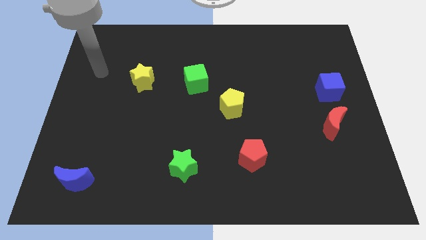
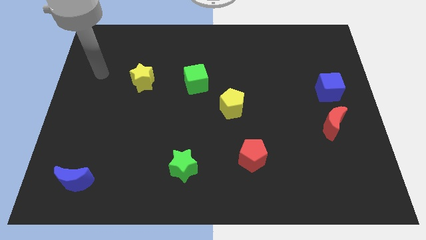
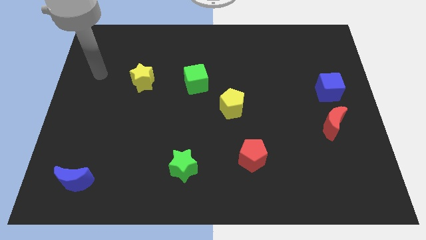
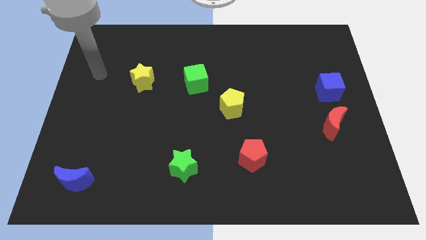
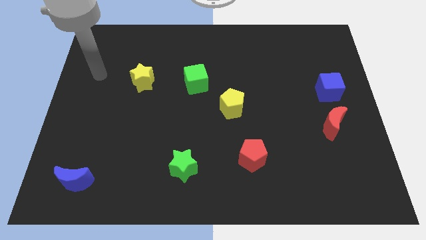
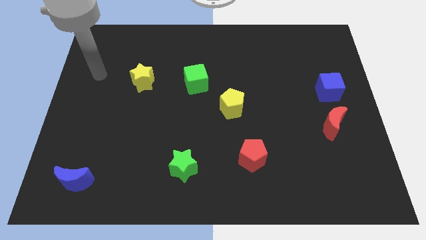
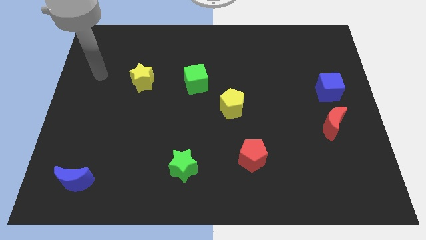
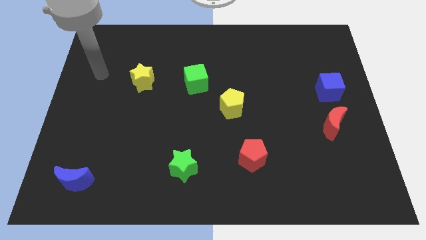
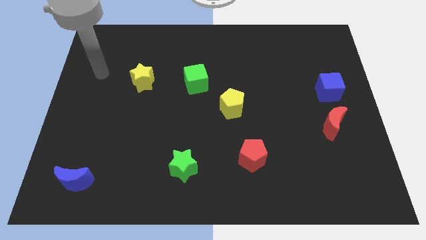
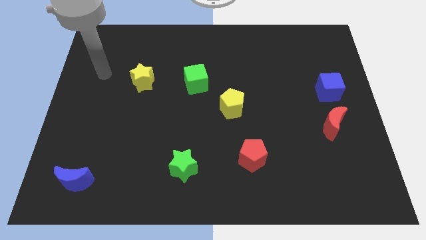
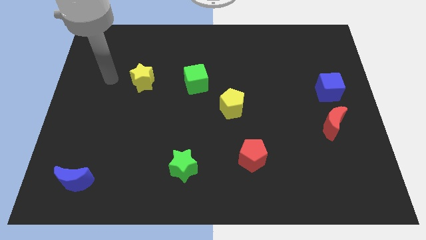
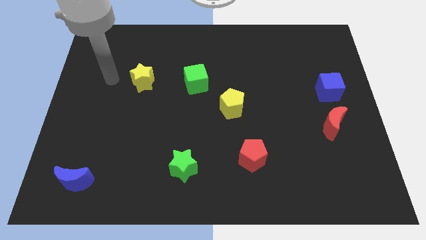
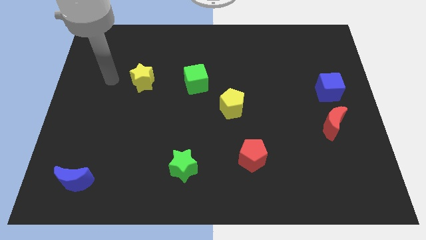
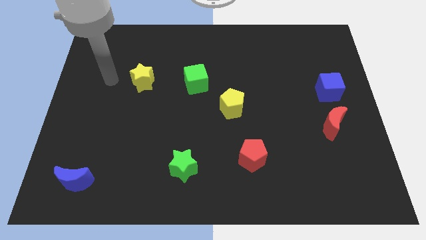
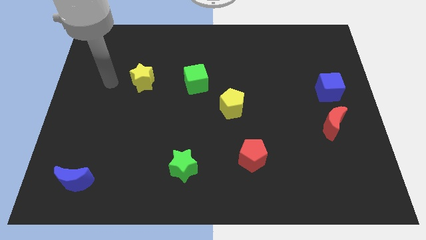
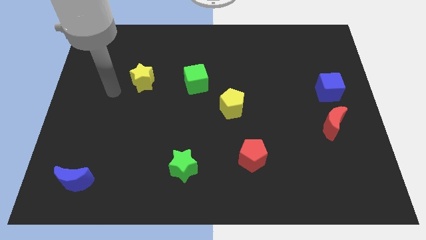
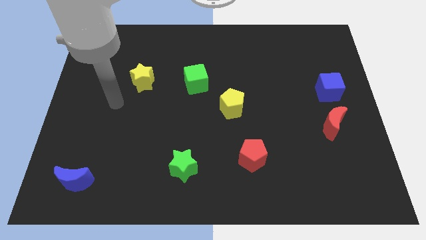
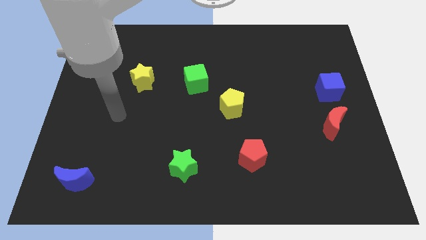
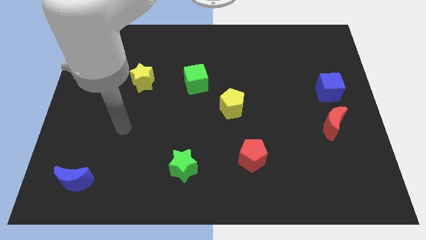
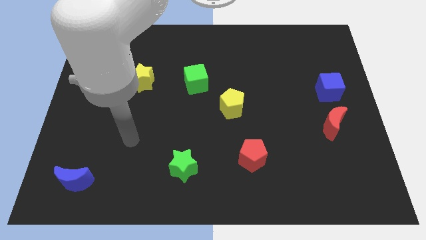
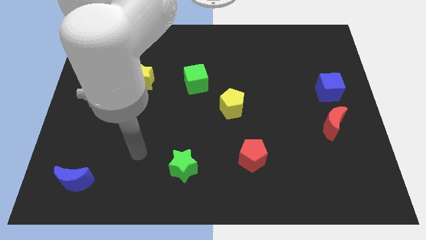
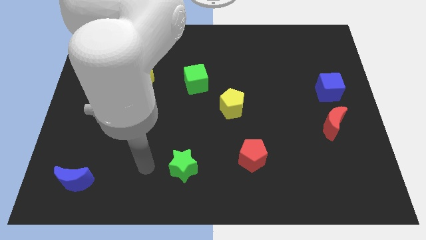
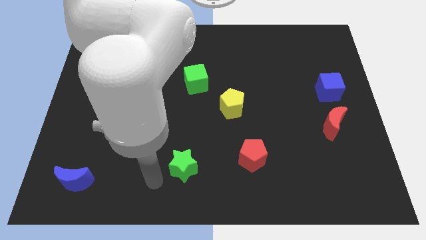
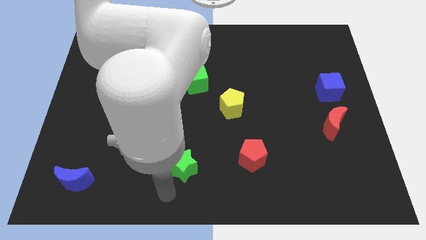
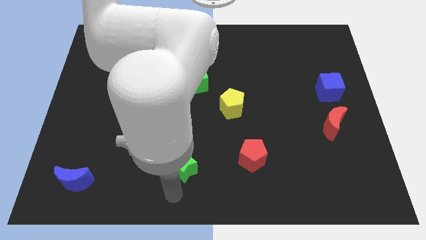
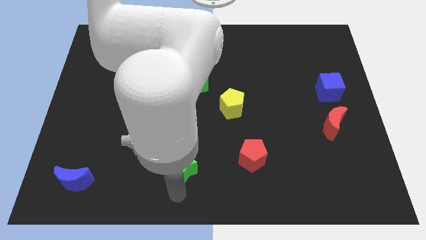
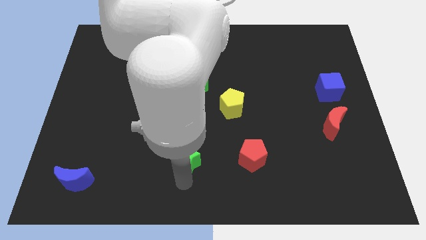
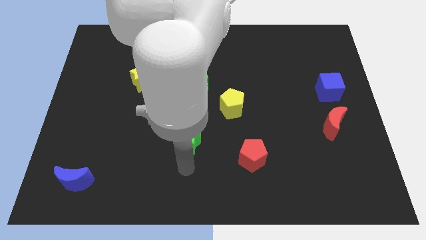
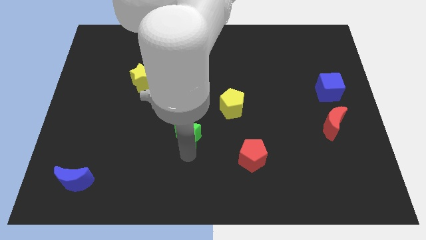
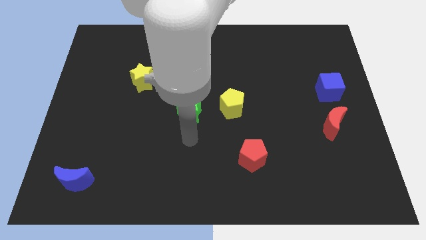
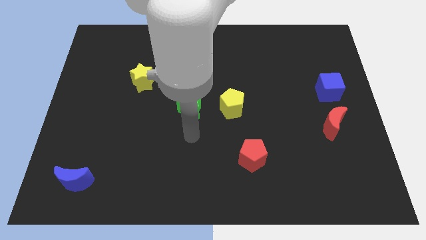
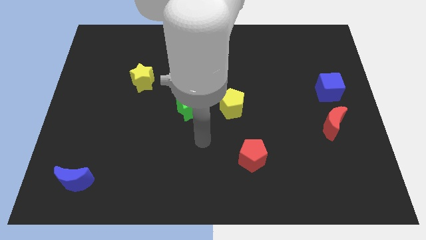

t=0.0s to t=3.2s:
move the green star to the left side of the yellow pentagon

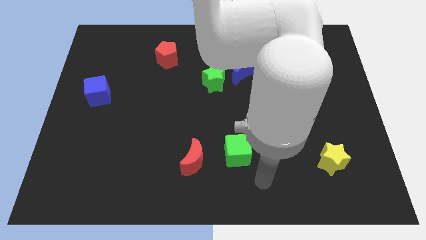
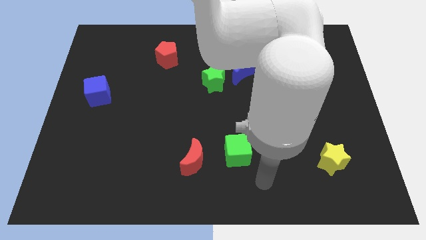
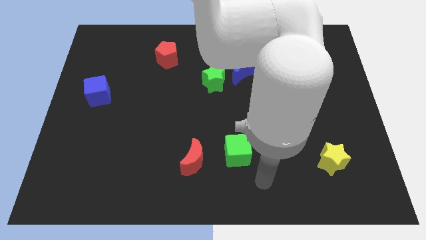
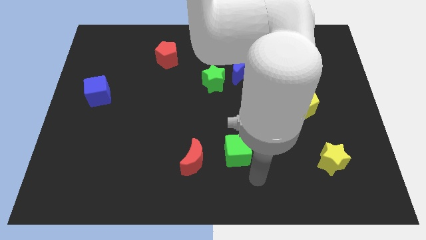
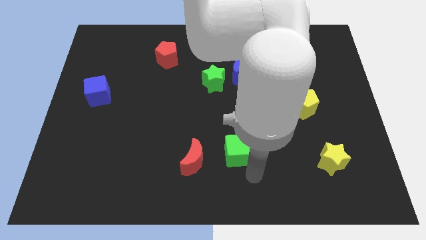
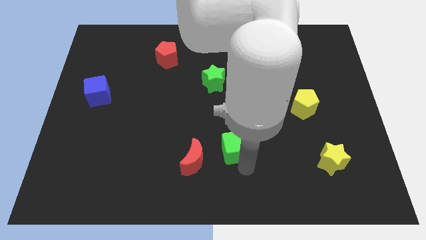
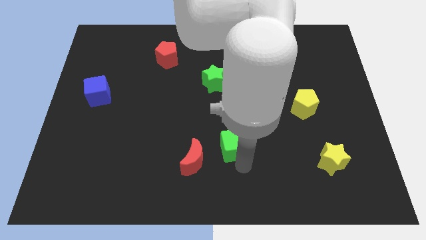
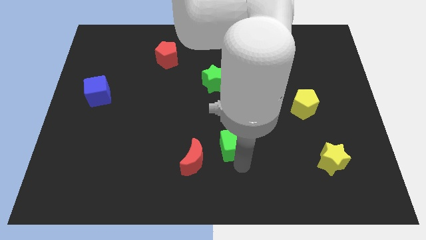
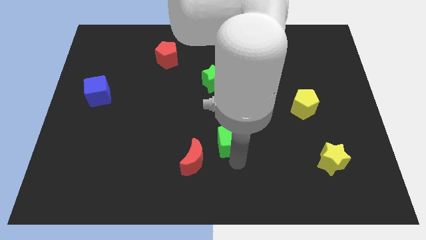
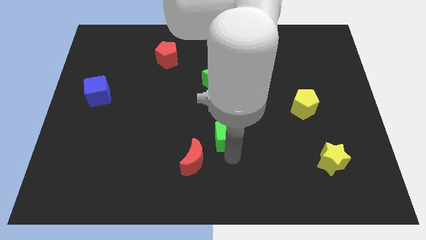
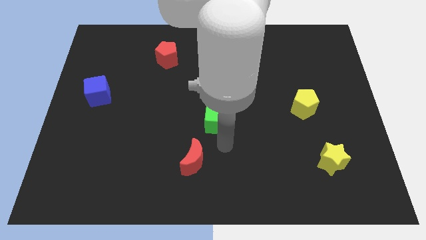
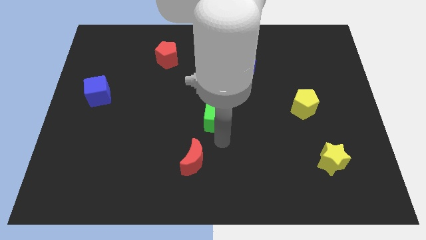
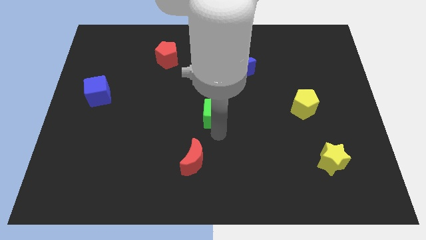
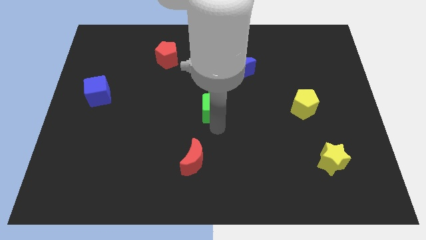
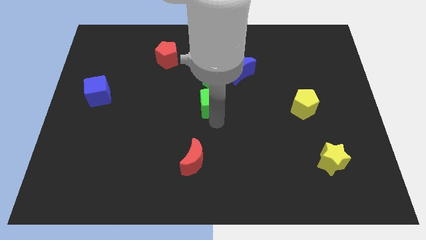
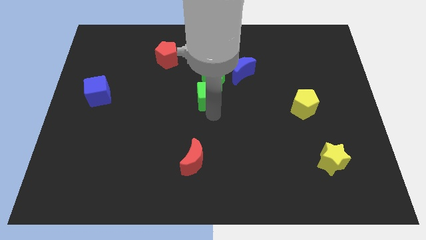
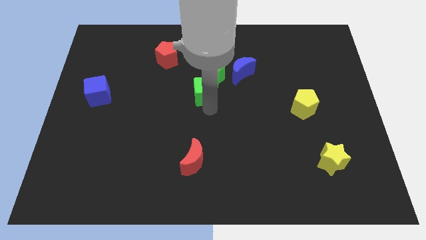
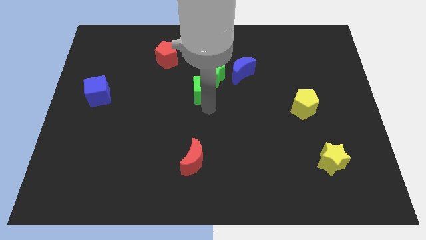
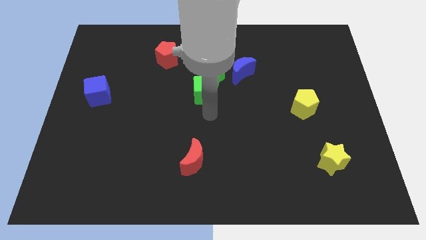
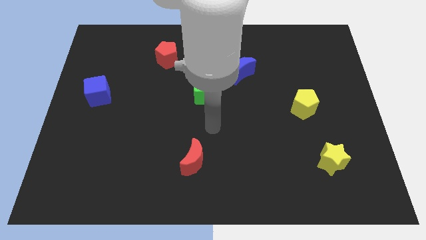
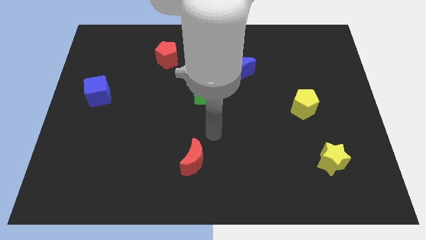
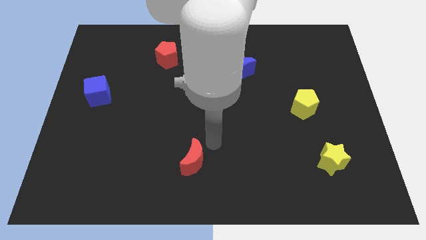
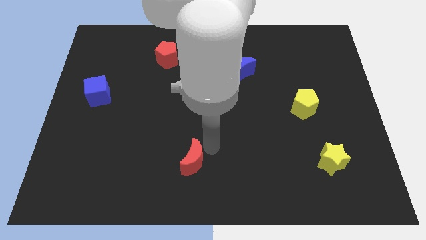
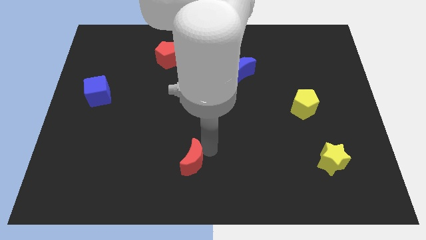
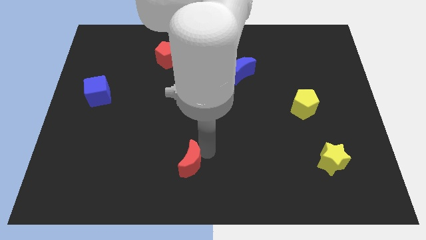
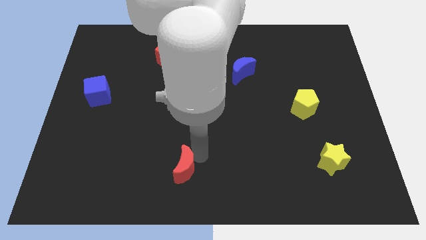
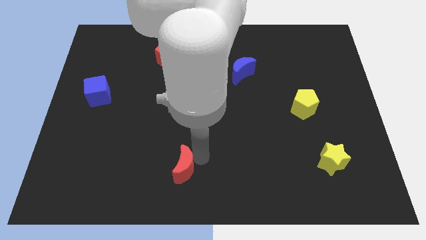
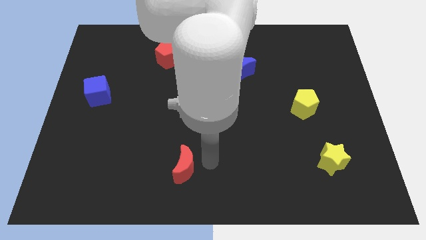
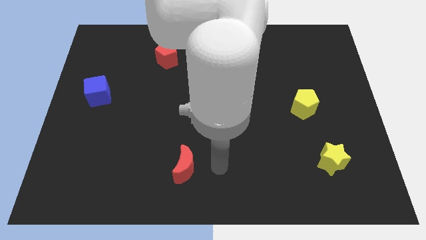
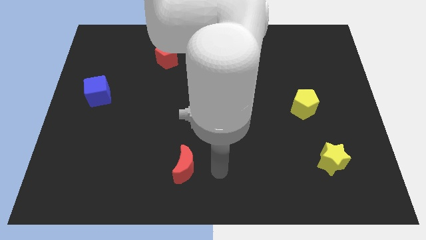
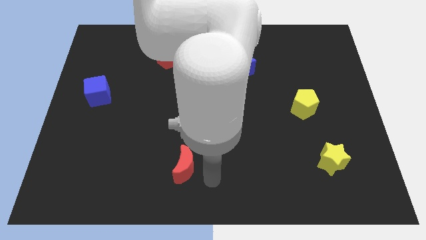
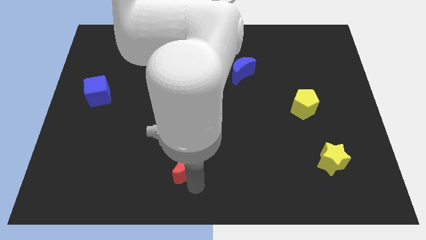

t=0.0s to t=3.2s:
slide the green cube to the center of the board

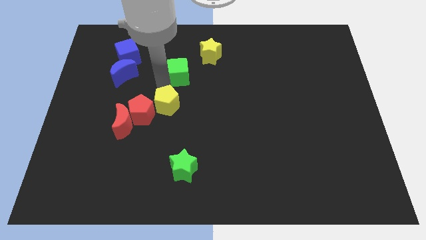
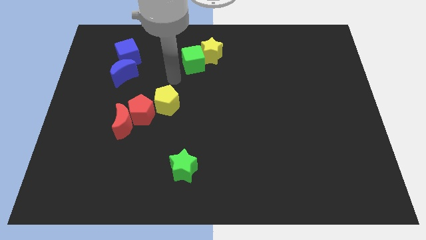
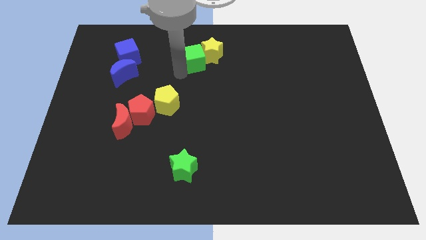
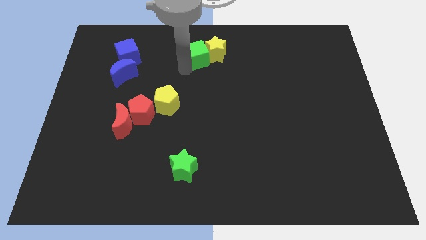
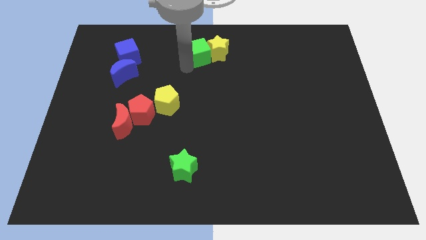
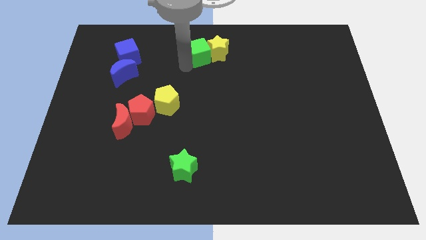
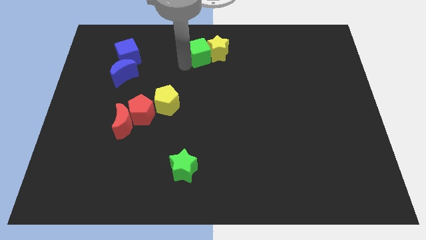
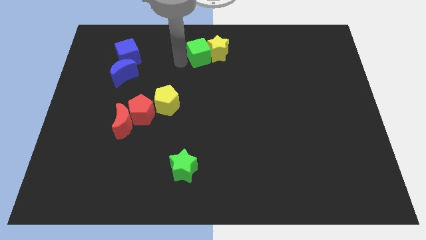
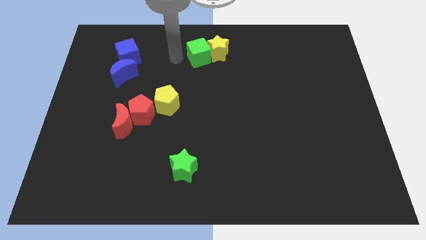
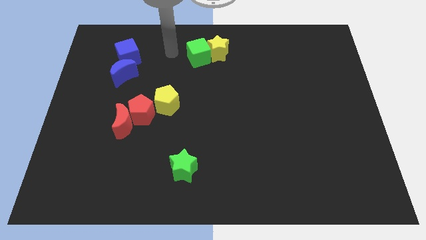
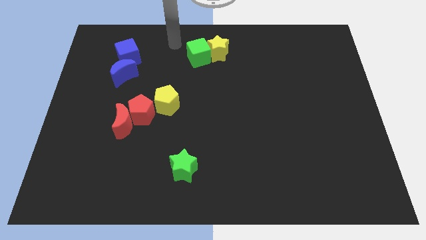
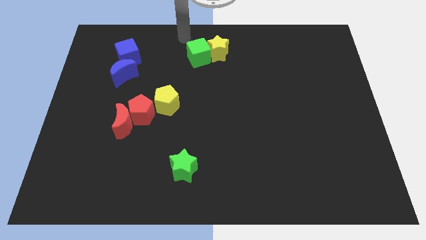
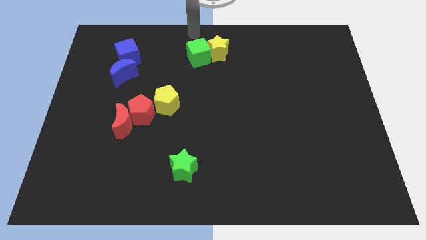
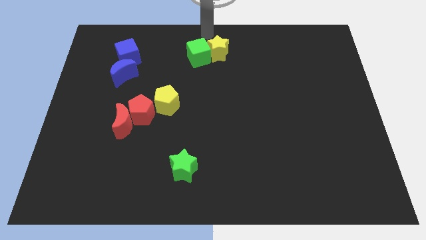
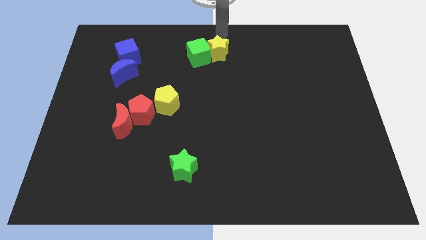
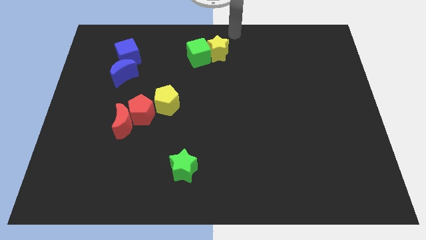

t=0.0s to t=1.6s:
push the yellow star and green cube to the top center of the board

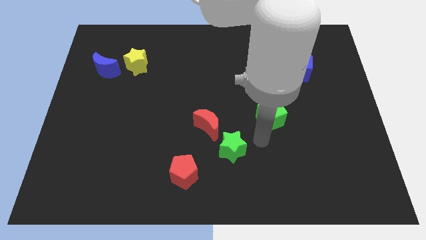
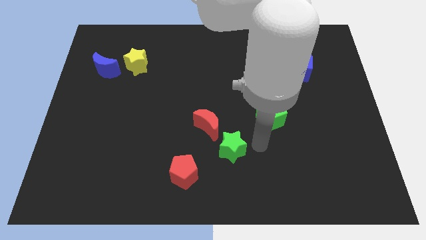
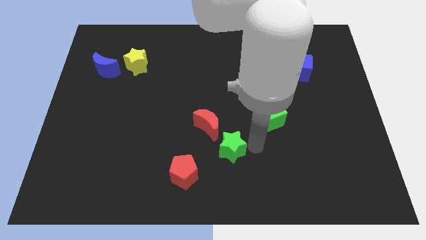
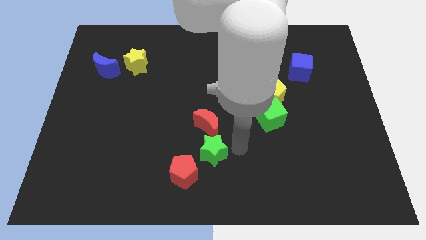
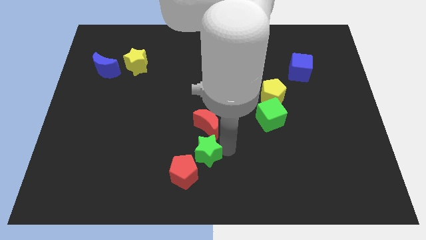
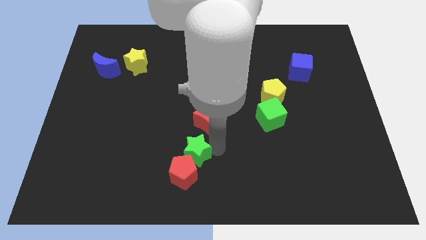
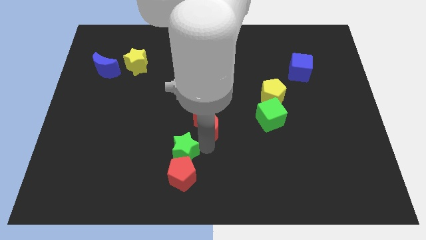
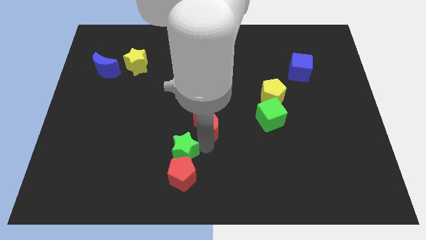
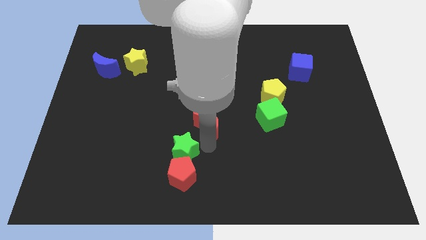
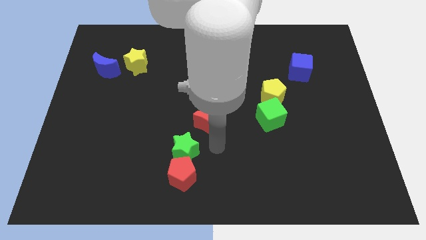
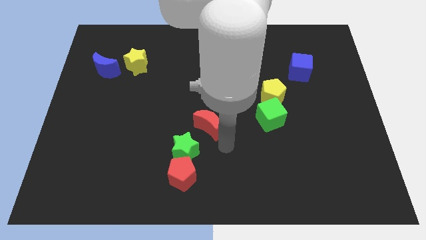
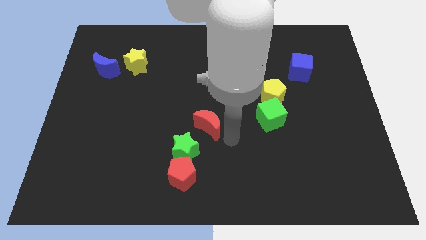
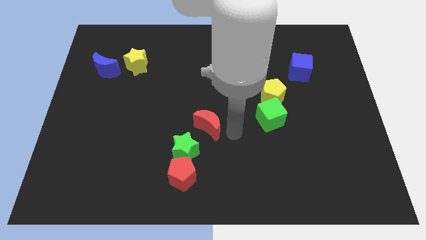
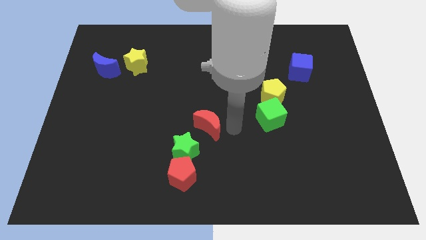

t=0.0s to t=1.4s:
place the green star in between the red pentagon and red moon
